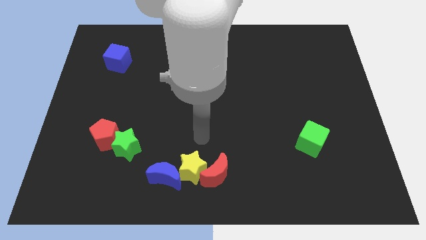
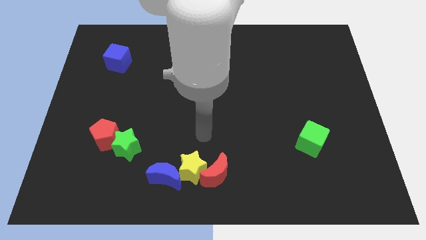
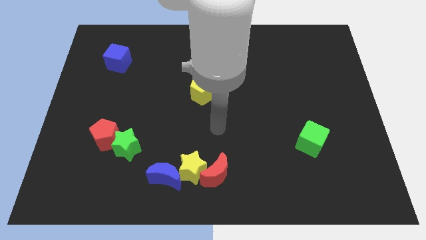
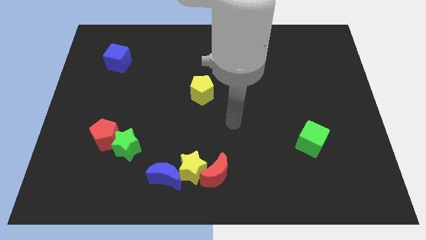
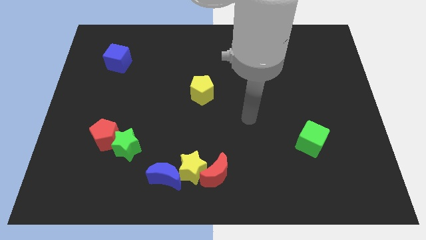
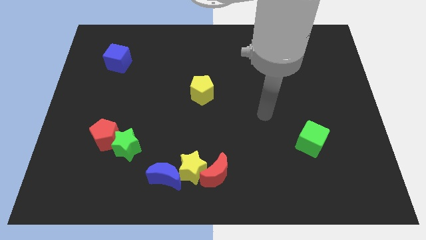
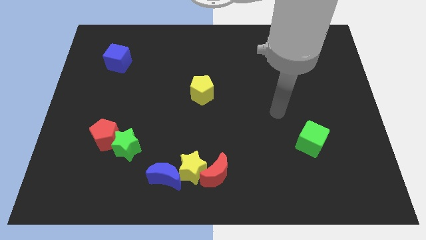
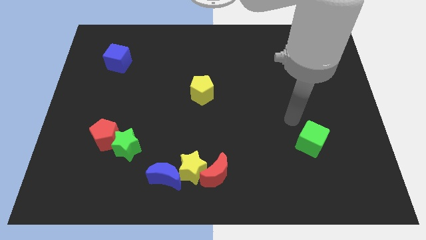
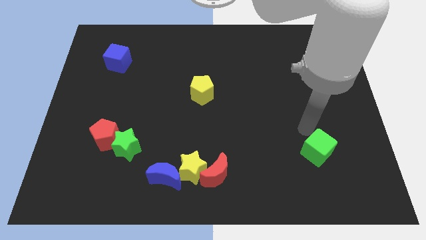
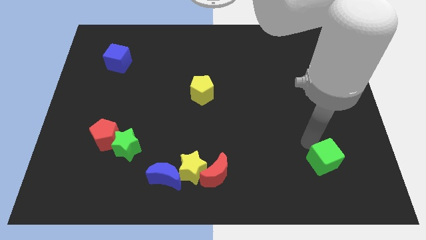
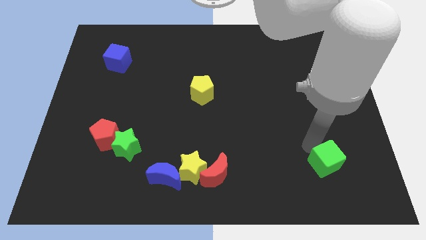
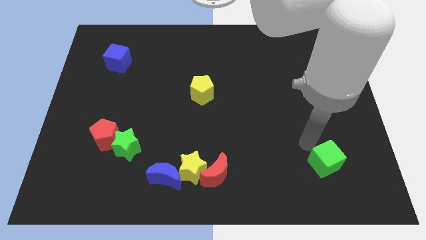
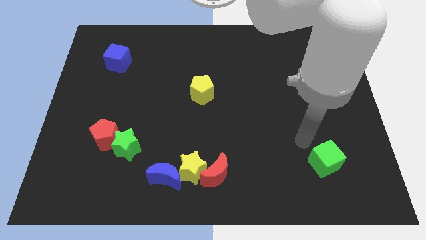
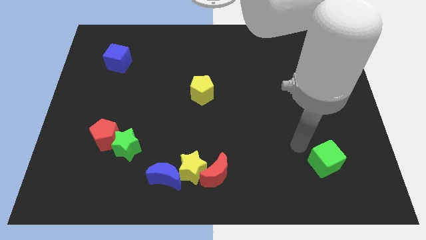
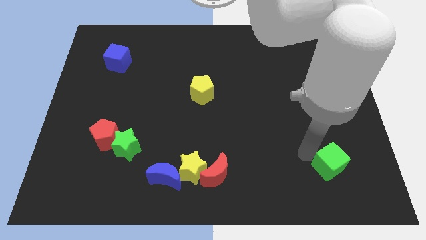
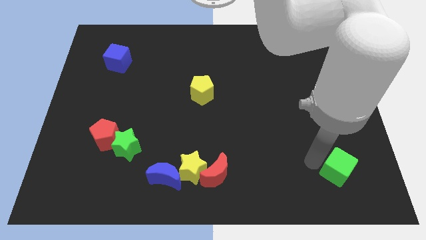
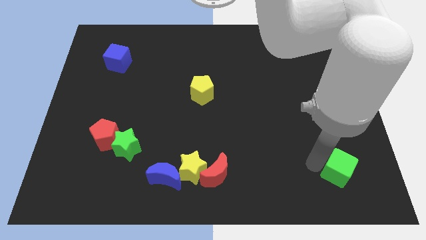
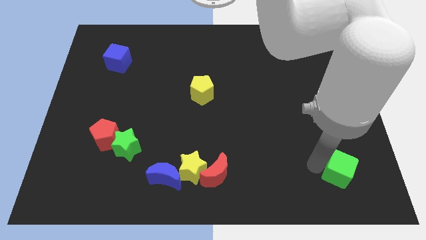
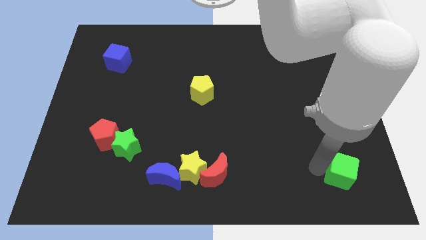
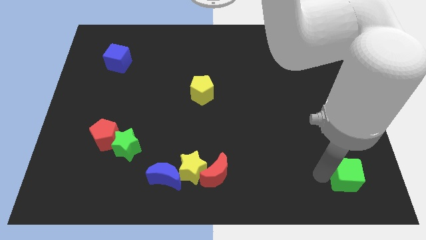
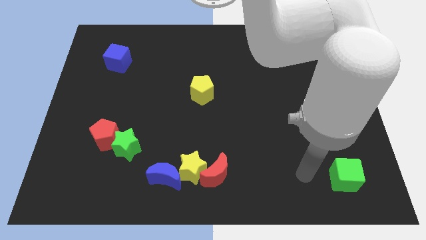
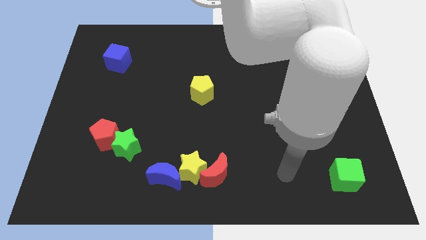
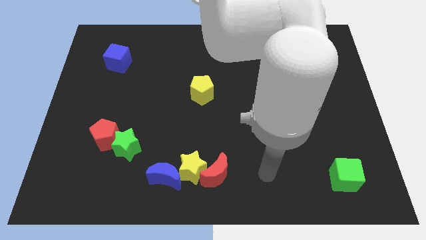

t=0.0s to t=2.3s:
move the green cube towards right bottom of the board

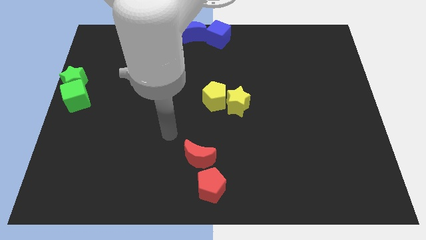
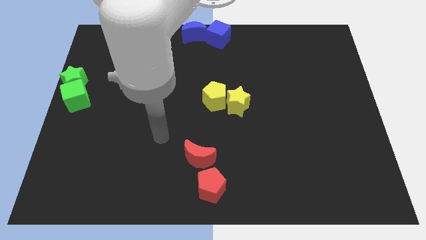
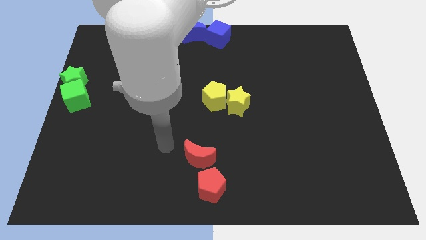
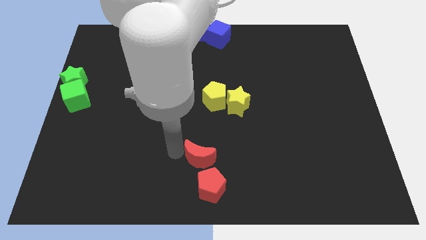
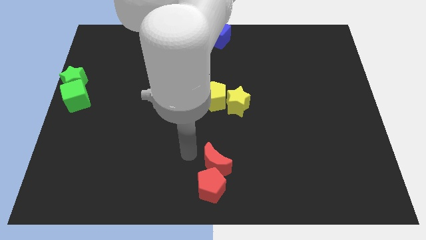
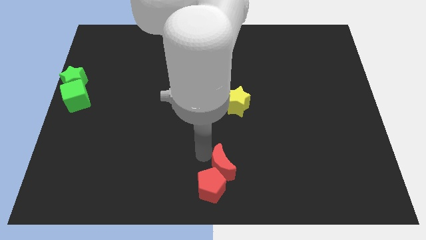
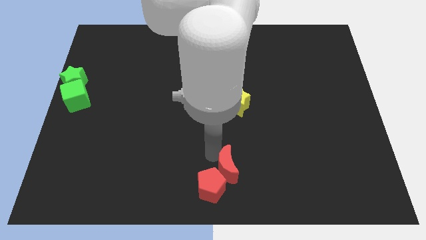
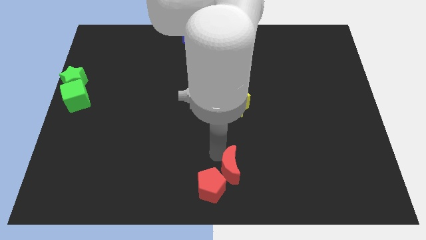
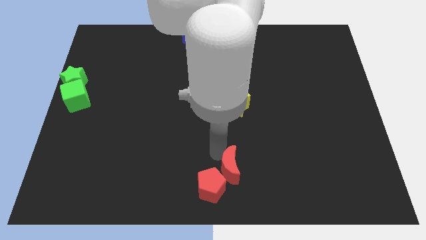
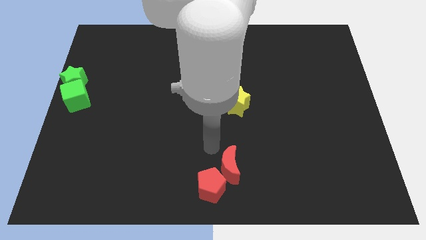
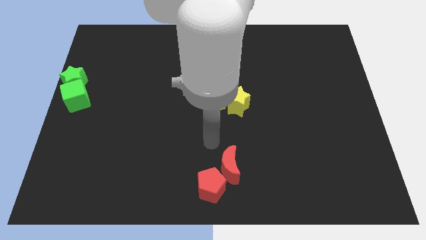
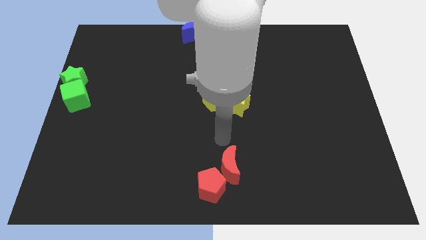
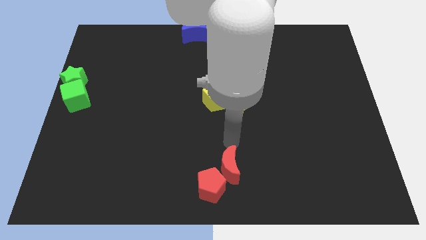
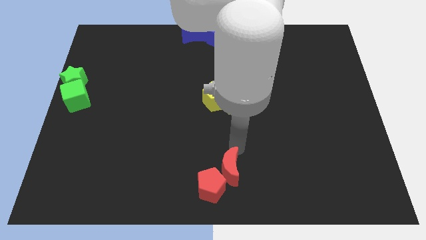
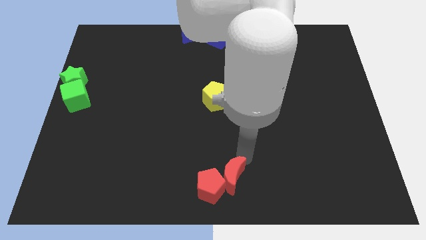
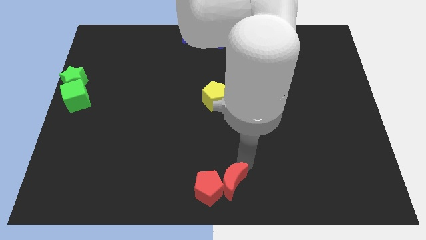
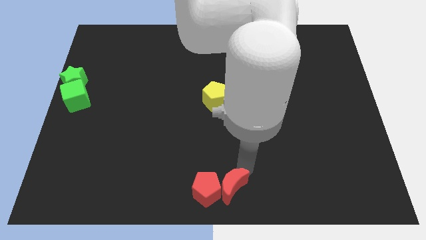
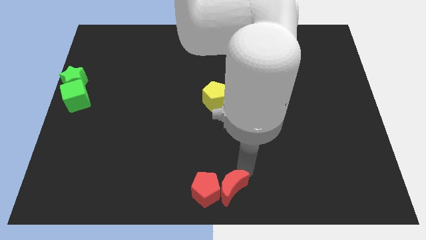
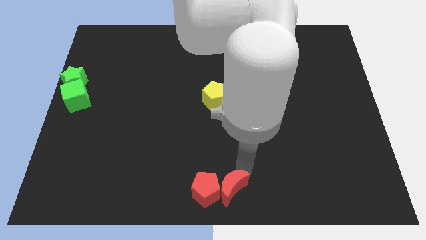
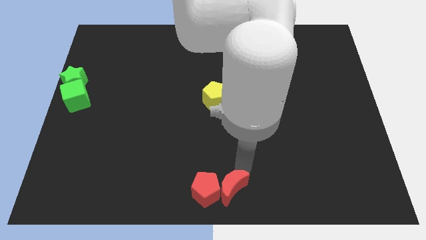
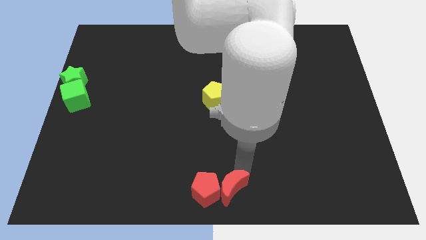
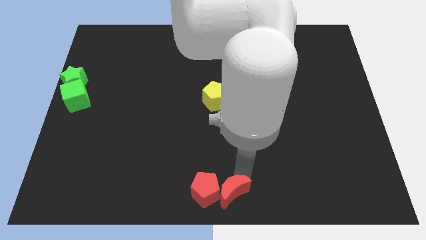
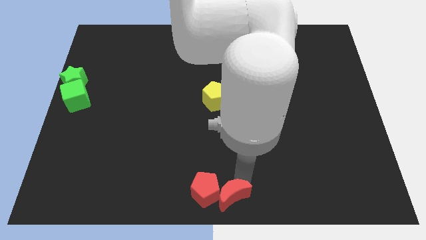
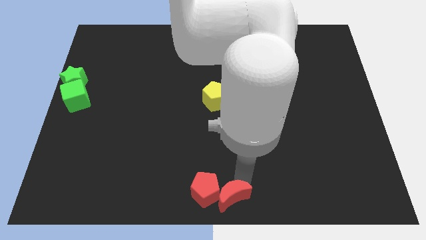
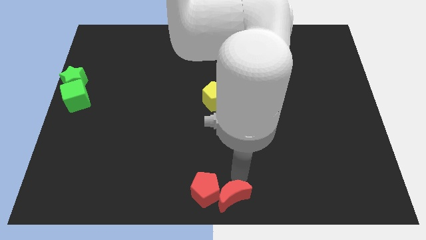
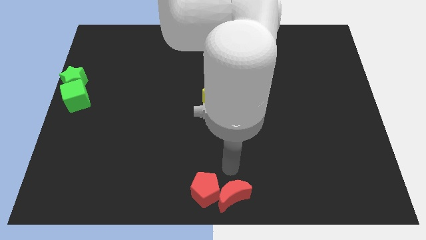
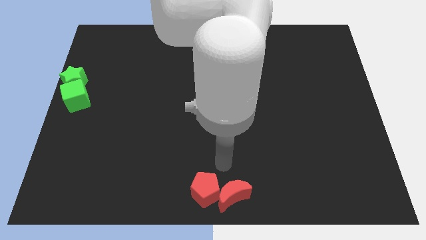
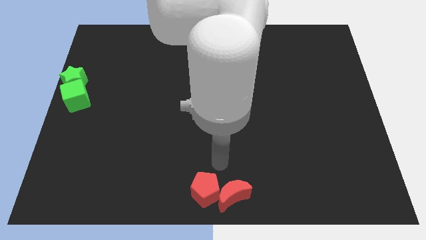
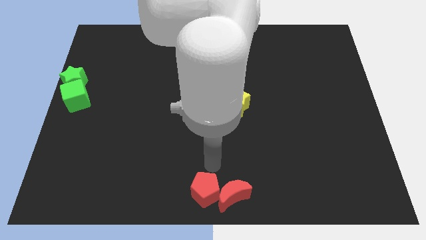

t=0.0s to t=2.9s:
push the red moon to the right side of the red pentagon

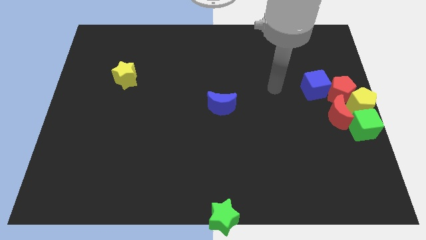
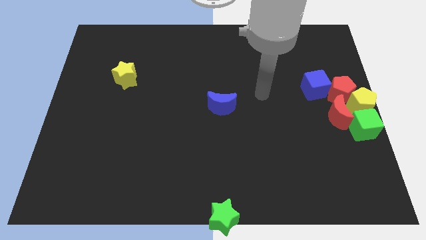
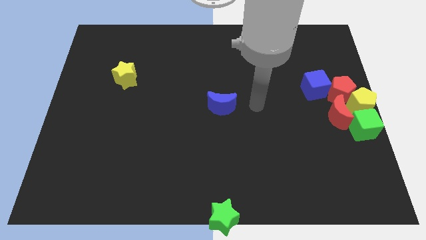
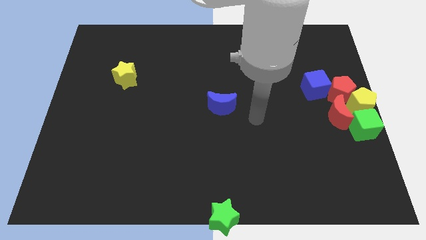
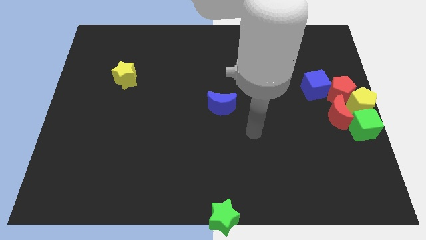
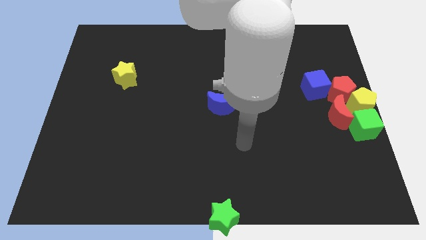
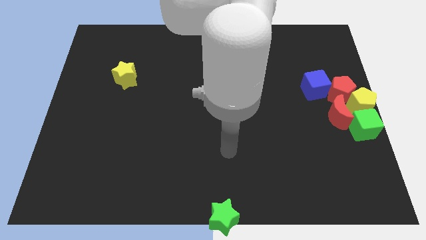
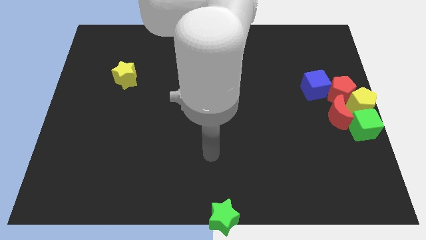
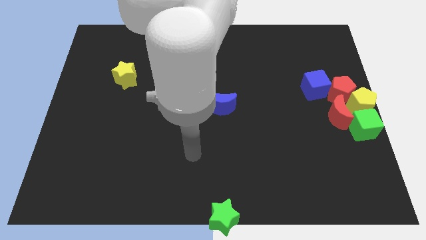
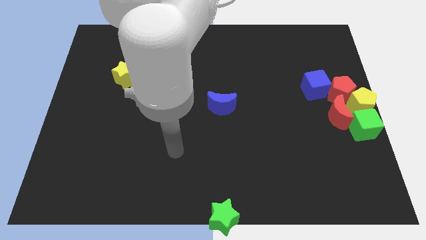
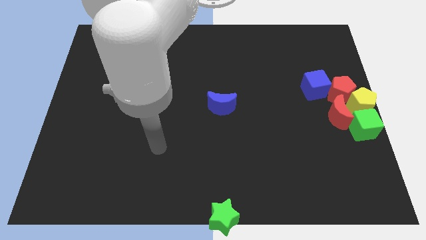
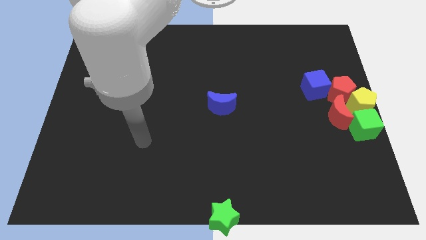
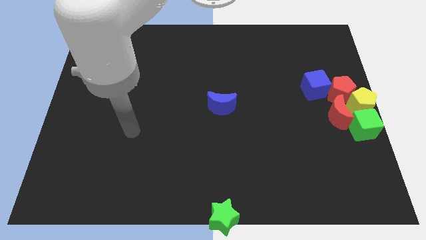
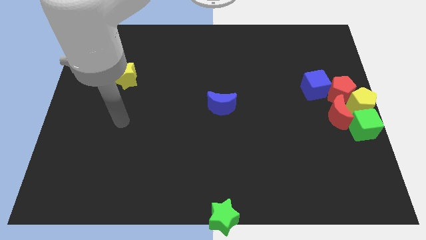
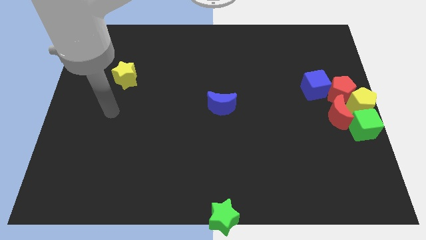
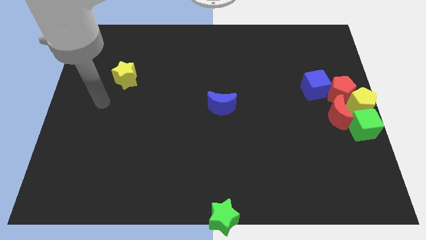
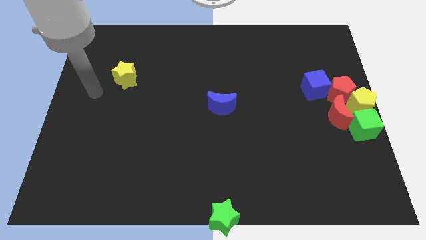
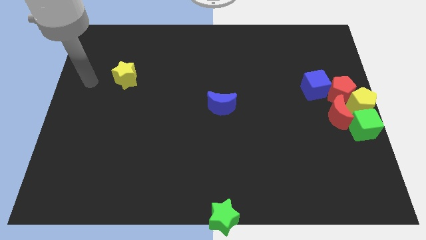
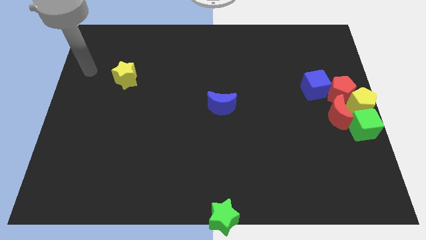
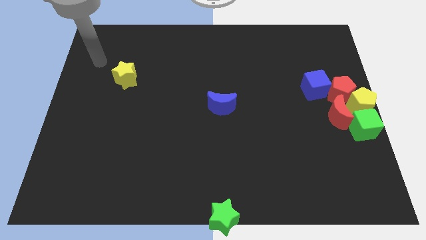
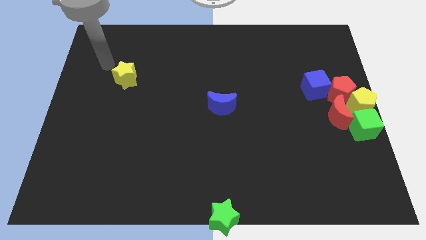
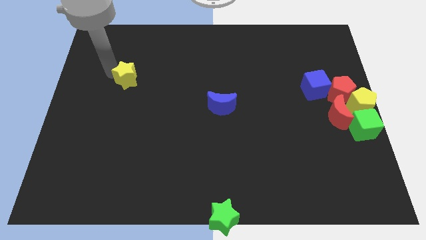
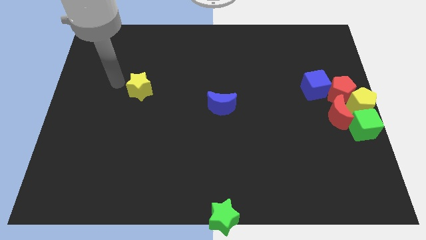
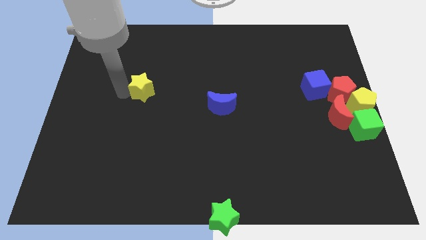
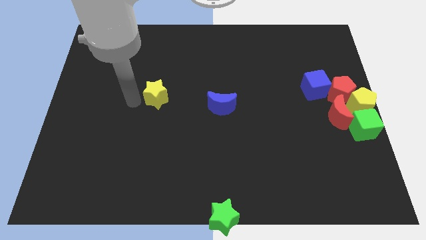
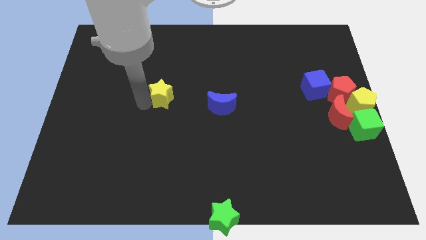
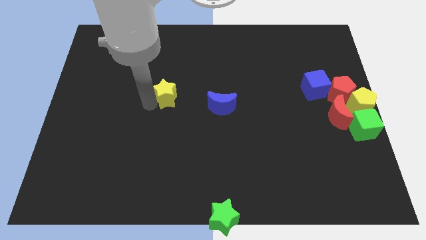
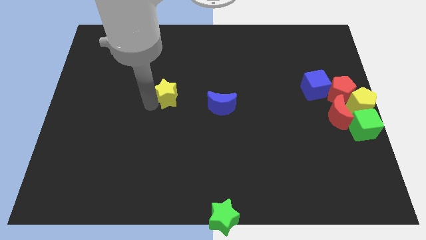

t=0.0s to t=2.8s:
place yellow star to the left of blue moon

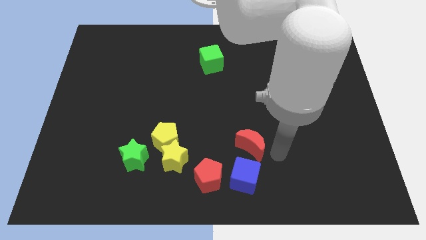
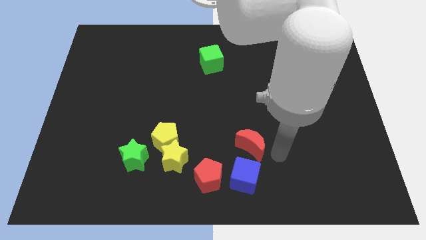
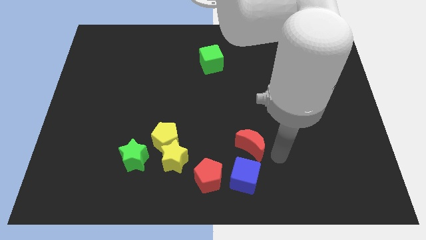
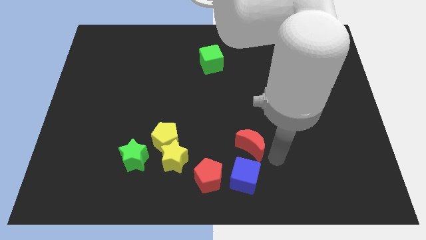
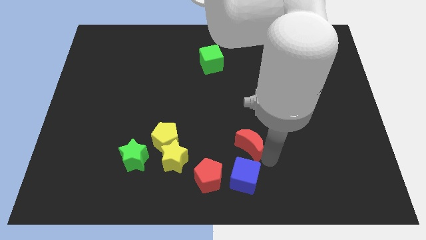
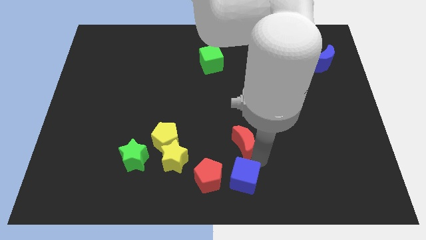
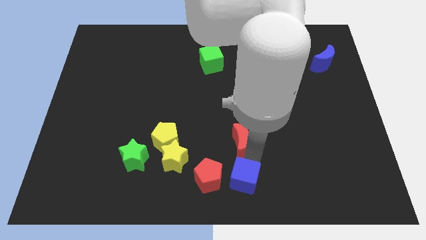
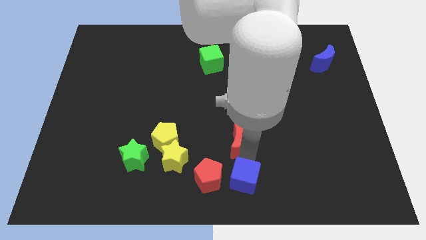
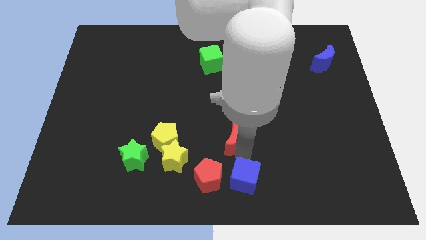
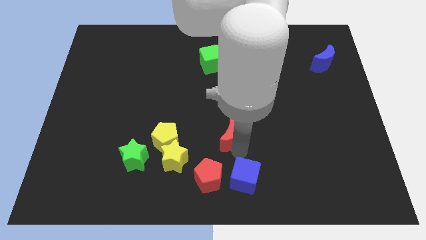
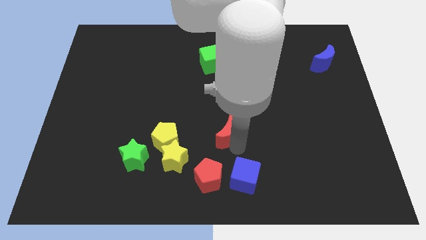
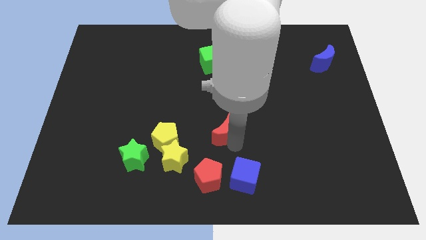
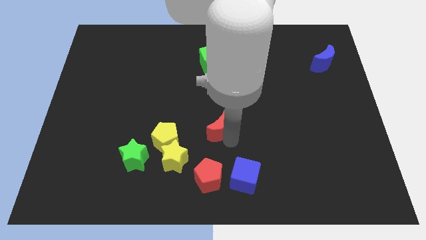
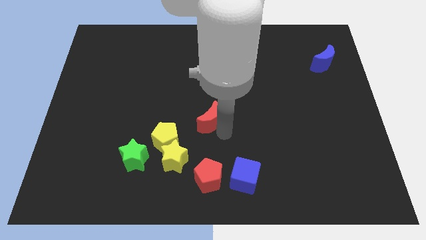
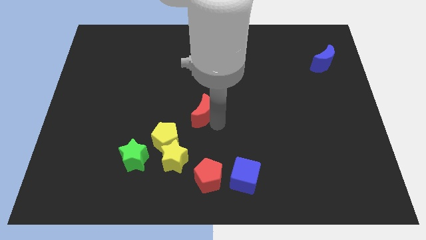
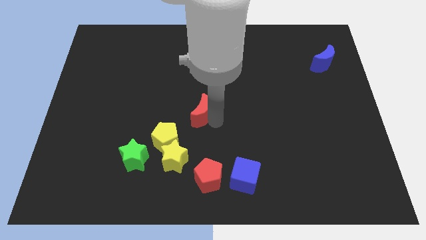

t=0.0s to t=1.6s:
move red crescent horizontally
